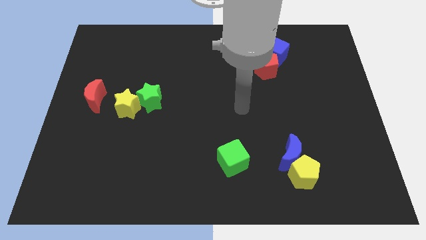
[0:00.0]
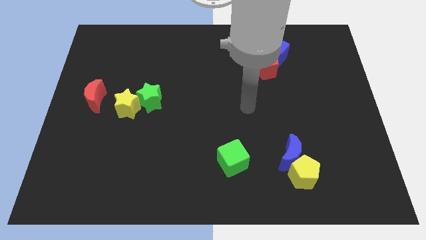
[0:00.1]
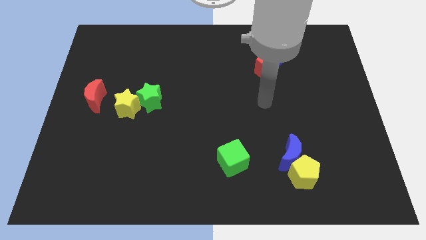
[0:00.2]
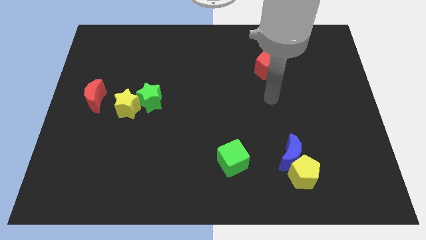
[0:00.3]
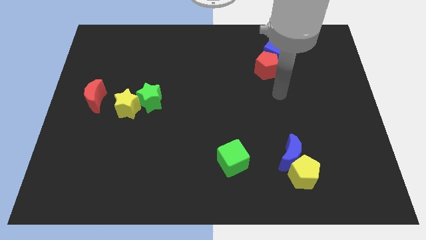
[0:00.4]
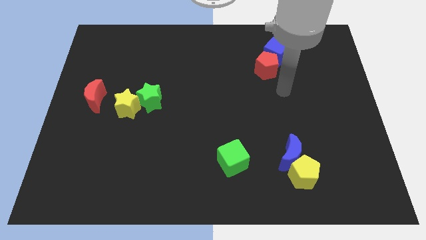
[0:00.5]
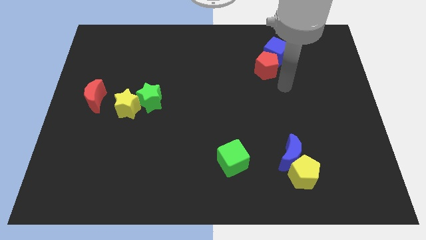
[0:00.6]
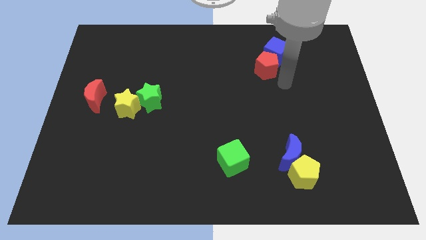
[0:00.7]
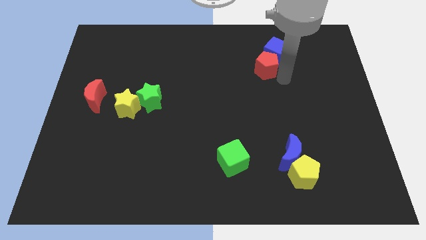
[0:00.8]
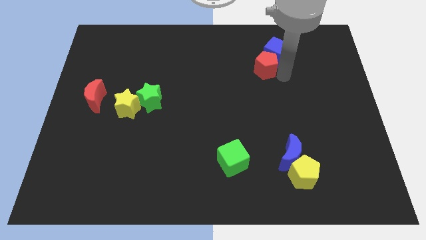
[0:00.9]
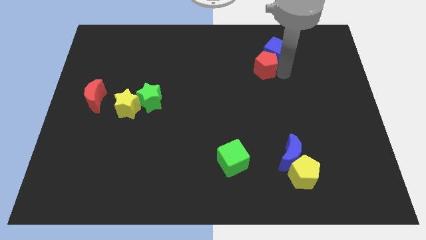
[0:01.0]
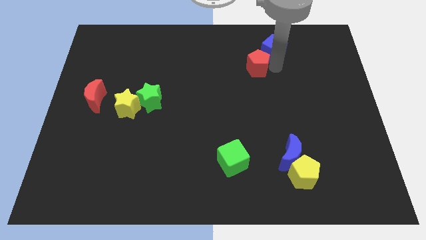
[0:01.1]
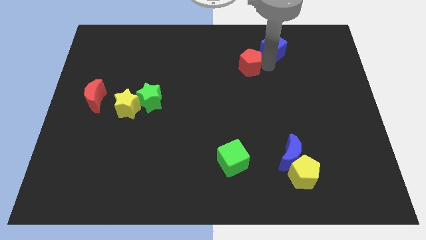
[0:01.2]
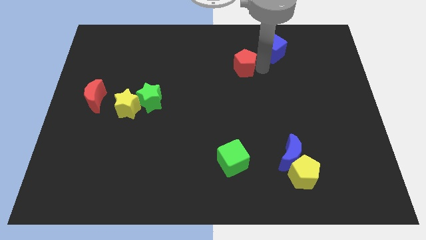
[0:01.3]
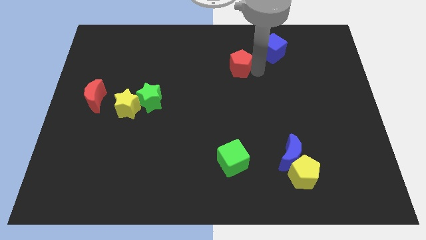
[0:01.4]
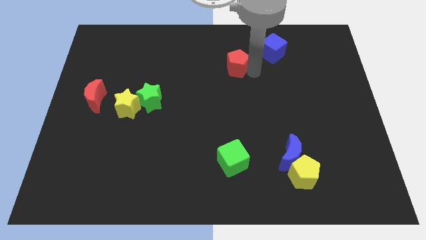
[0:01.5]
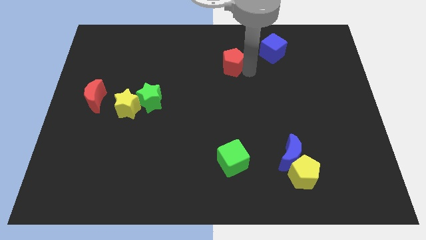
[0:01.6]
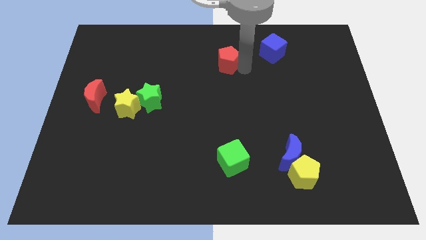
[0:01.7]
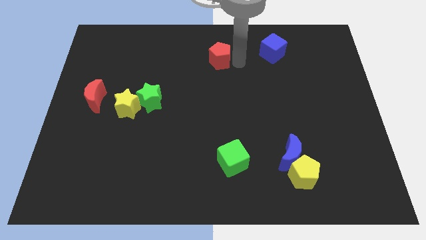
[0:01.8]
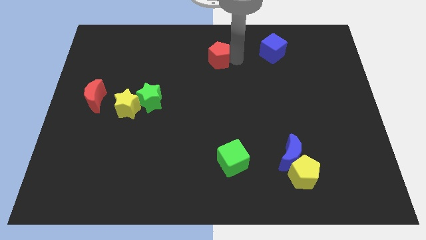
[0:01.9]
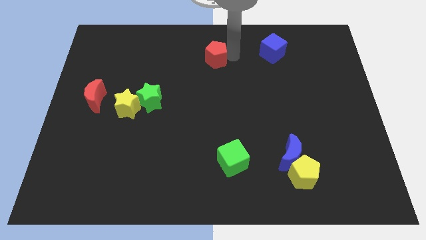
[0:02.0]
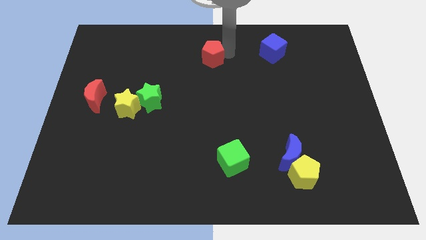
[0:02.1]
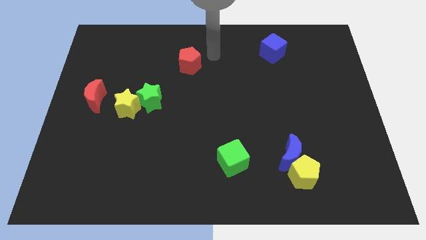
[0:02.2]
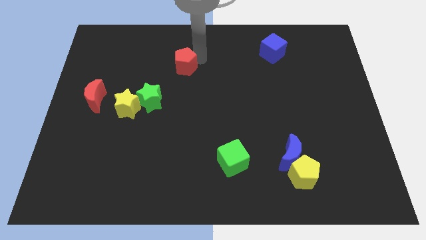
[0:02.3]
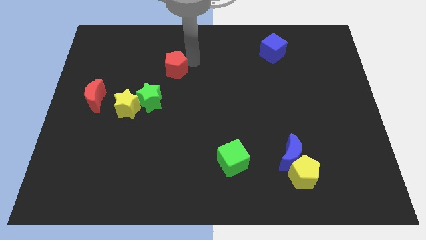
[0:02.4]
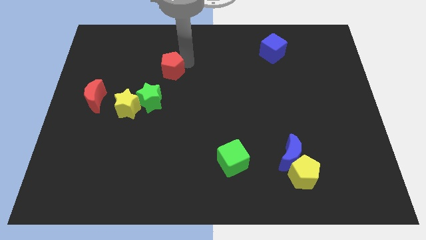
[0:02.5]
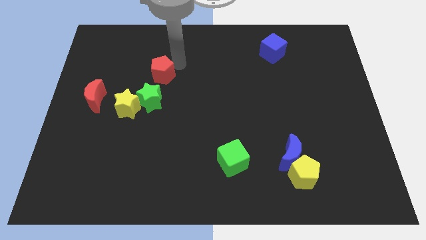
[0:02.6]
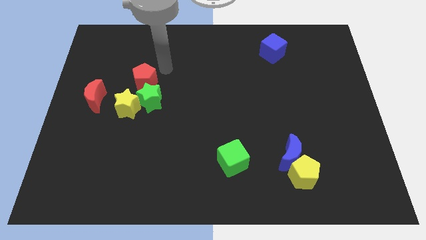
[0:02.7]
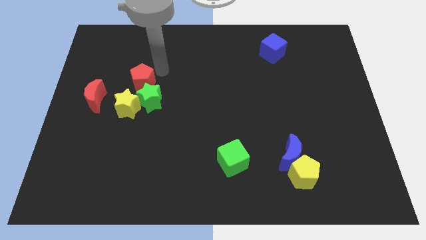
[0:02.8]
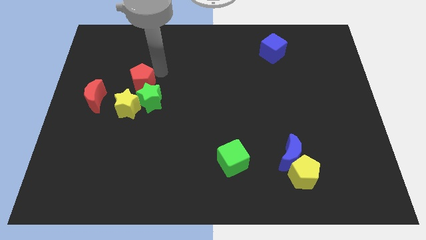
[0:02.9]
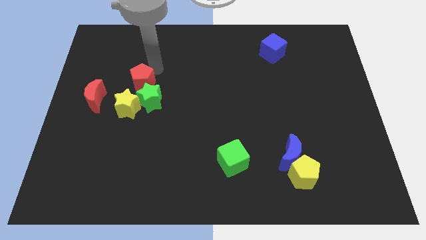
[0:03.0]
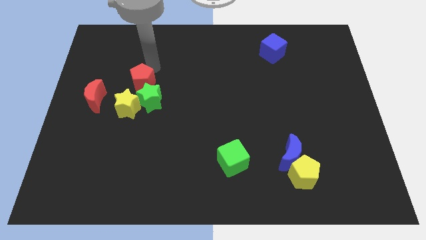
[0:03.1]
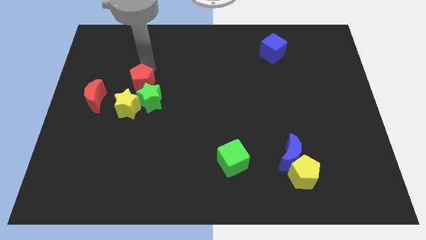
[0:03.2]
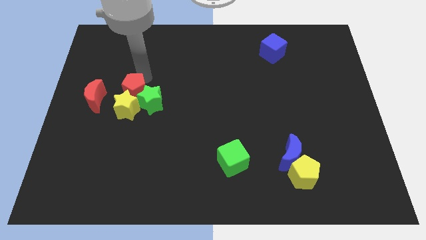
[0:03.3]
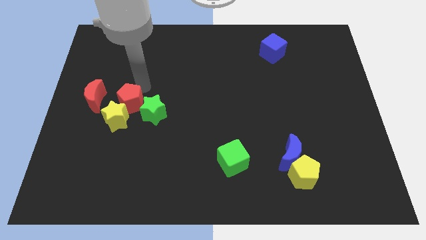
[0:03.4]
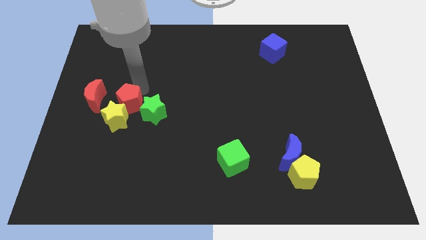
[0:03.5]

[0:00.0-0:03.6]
put the red pentagon to the yellow star

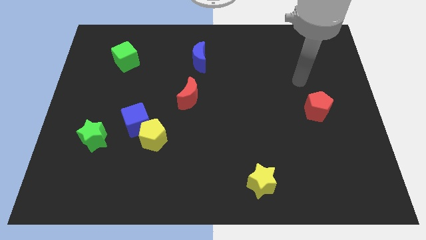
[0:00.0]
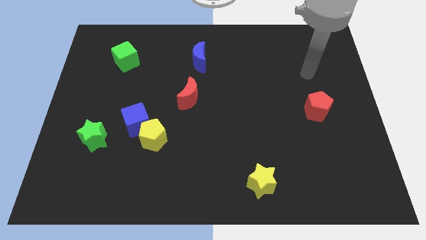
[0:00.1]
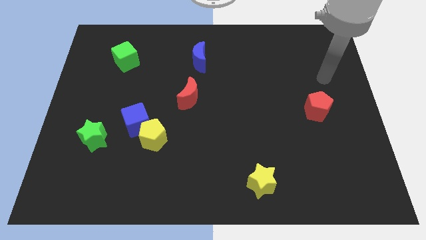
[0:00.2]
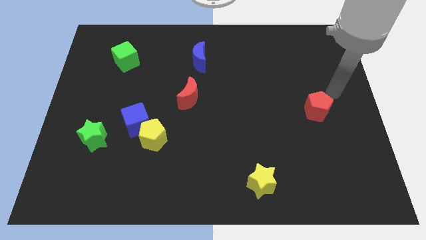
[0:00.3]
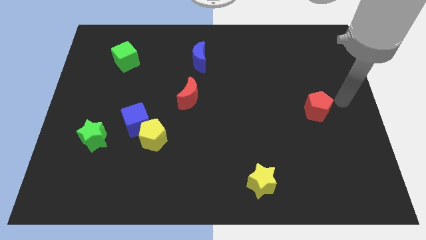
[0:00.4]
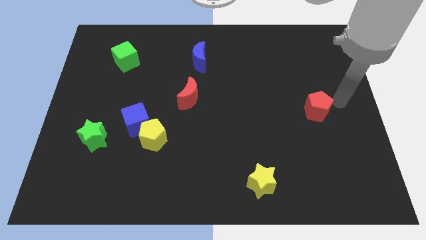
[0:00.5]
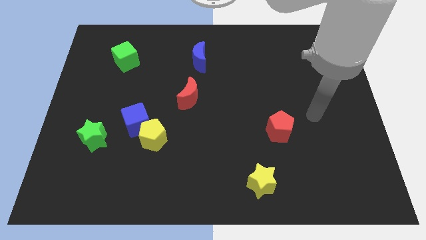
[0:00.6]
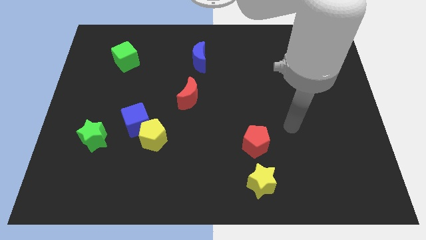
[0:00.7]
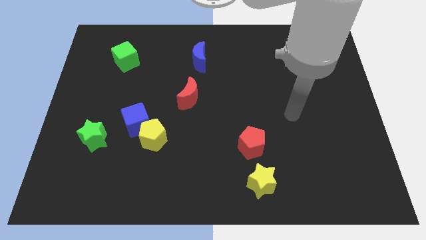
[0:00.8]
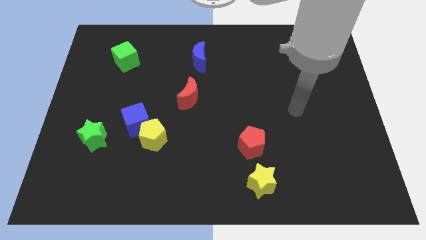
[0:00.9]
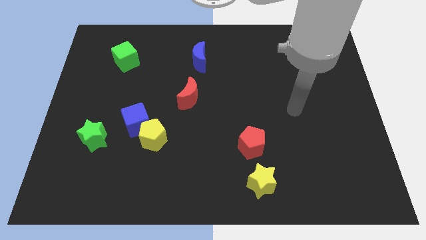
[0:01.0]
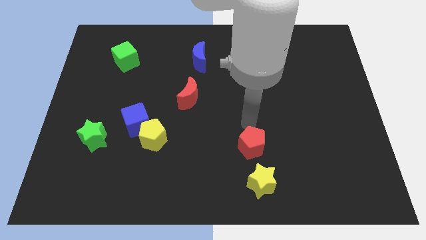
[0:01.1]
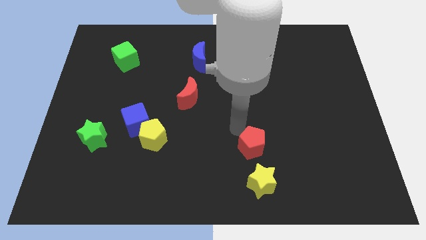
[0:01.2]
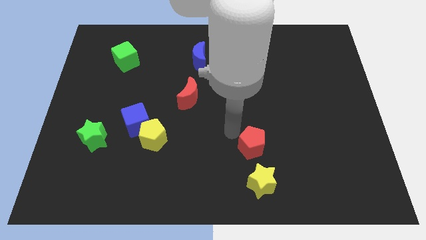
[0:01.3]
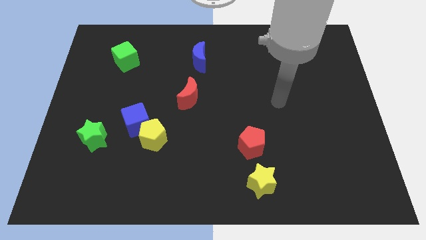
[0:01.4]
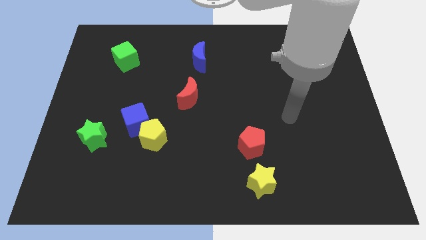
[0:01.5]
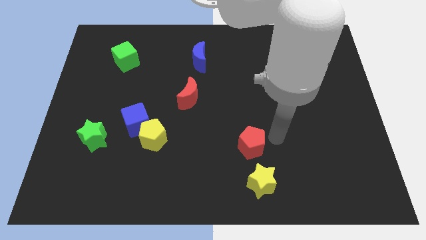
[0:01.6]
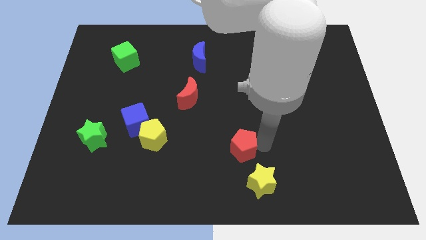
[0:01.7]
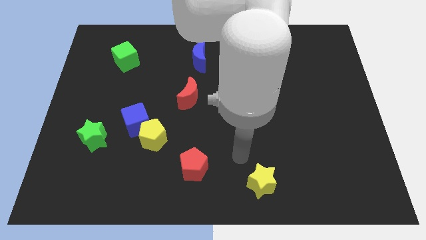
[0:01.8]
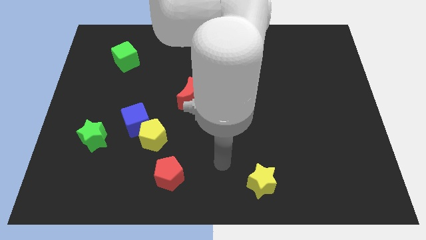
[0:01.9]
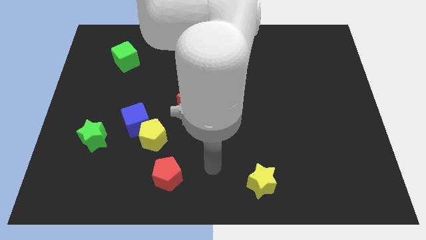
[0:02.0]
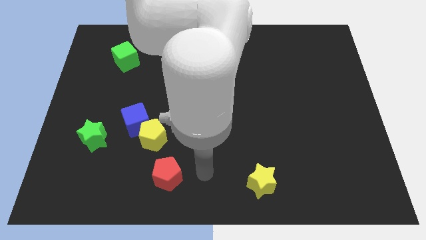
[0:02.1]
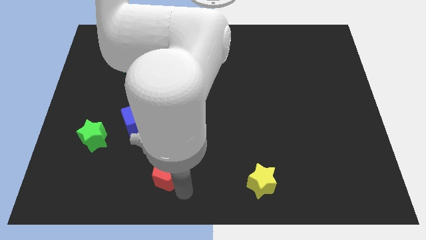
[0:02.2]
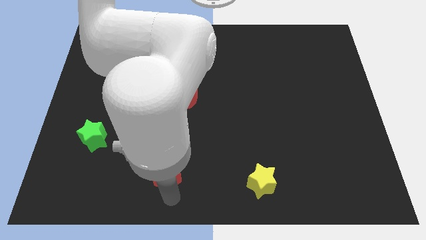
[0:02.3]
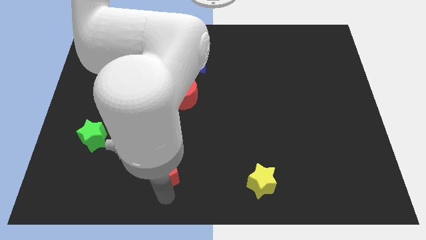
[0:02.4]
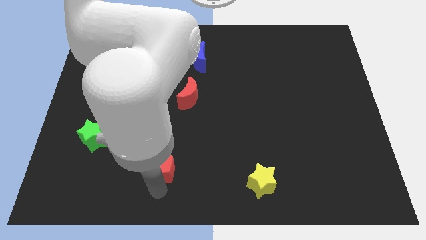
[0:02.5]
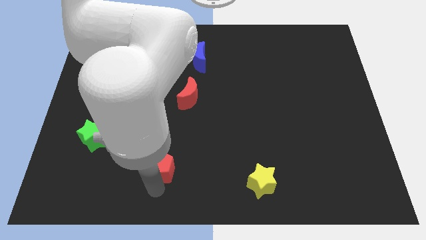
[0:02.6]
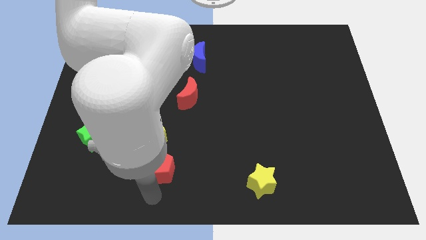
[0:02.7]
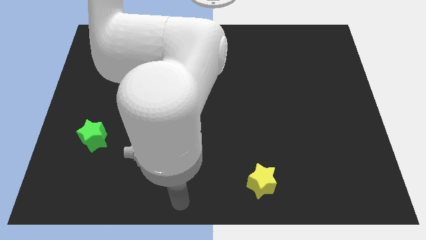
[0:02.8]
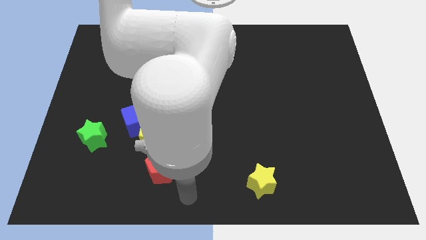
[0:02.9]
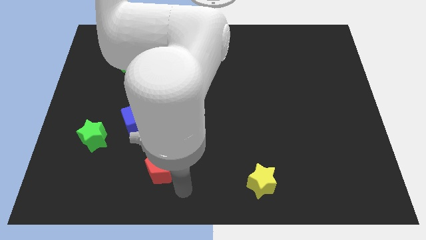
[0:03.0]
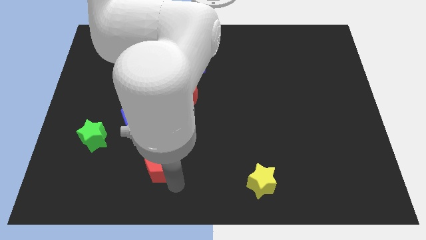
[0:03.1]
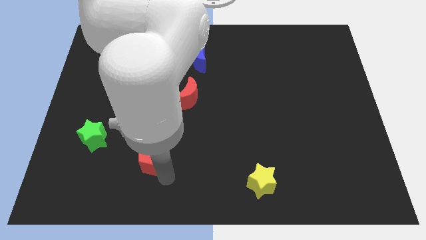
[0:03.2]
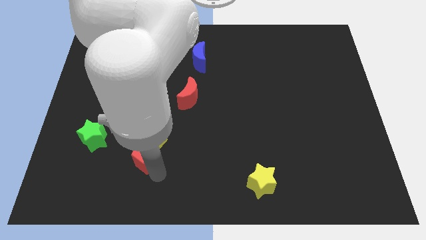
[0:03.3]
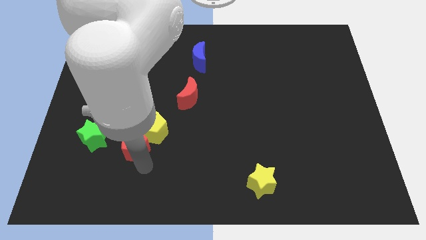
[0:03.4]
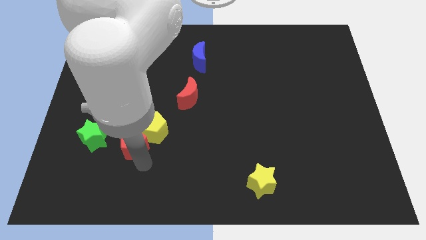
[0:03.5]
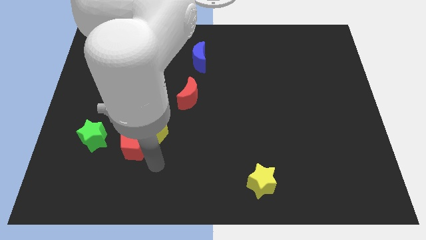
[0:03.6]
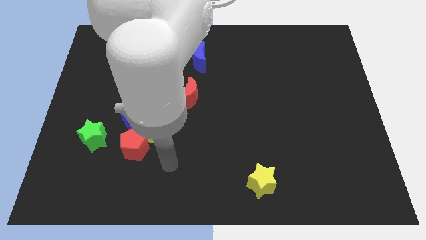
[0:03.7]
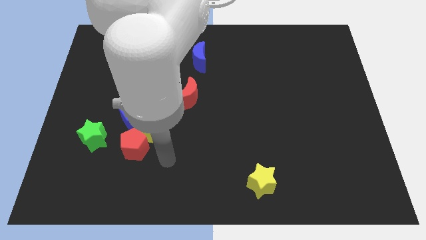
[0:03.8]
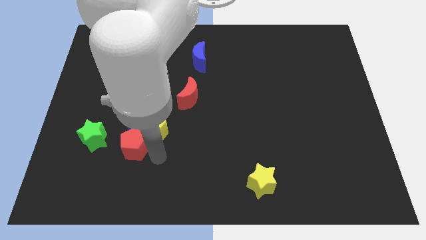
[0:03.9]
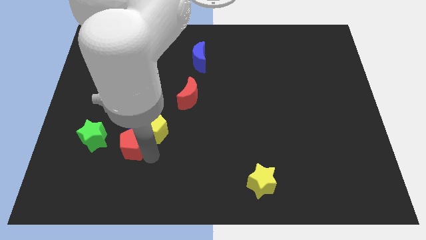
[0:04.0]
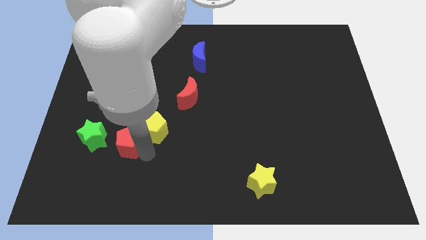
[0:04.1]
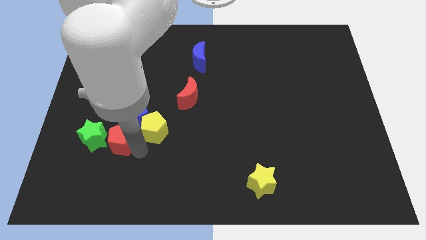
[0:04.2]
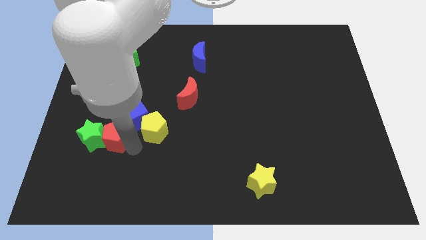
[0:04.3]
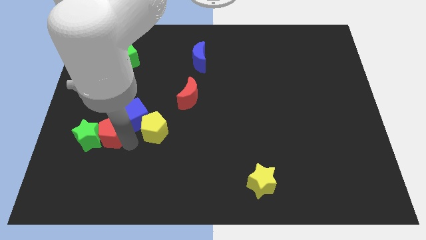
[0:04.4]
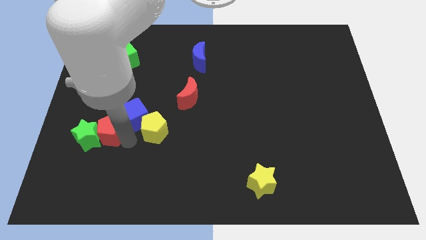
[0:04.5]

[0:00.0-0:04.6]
move the red pentagon to the green star

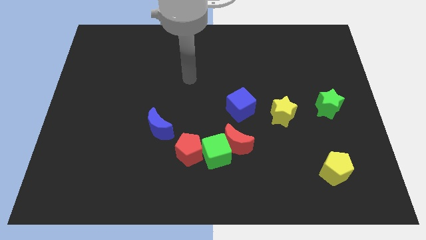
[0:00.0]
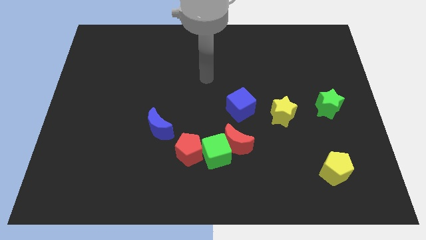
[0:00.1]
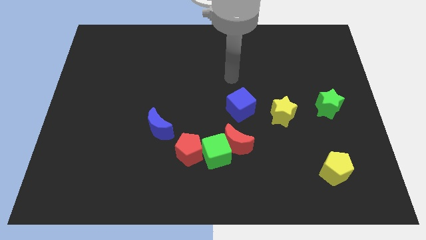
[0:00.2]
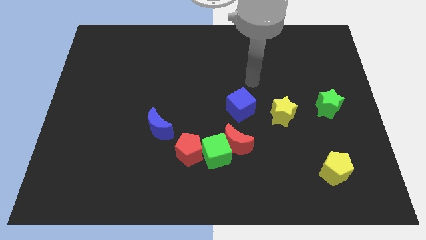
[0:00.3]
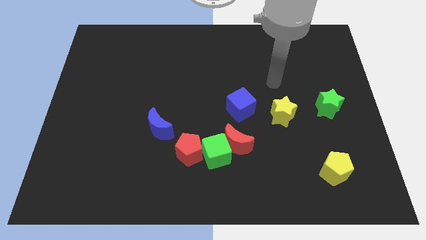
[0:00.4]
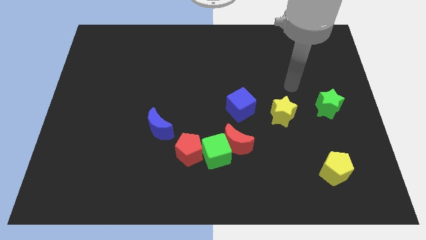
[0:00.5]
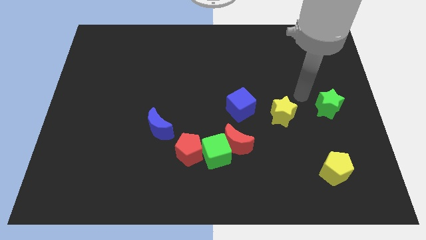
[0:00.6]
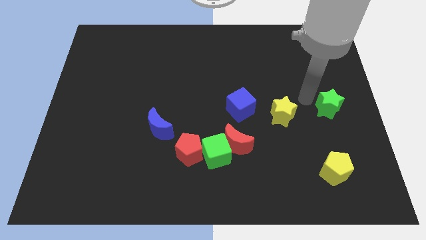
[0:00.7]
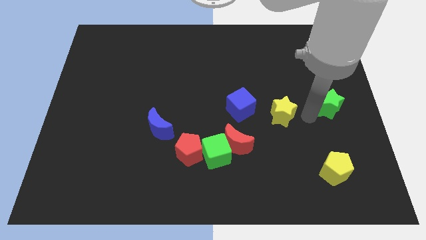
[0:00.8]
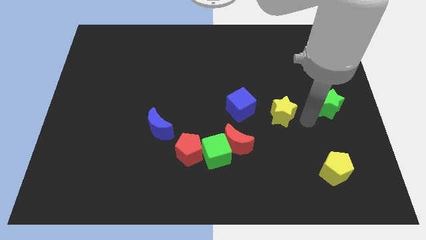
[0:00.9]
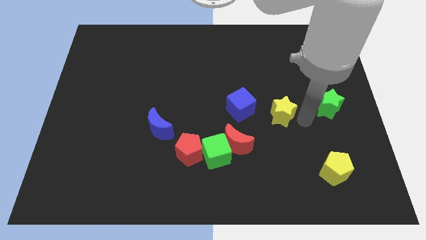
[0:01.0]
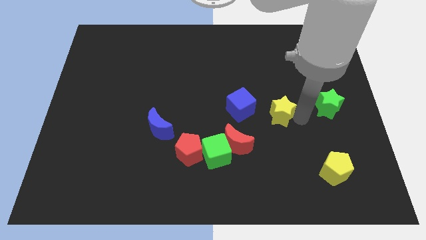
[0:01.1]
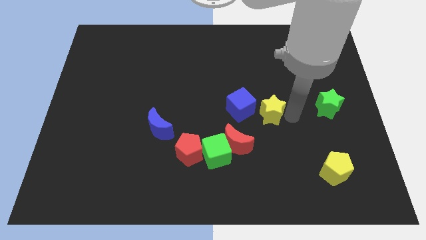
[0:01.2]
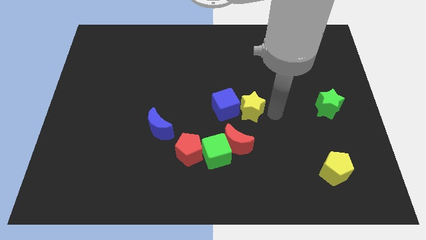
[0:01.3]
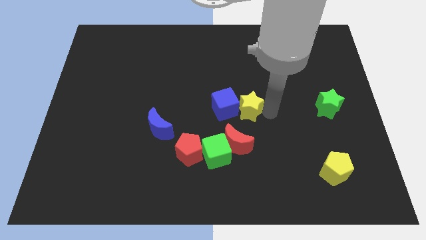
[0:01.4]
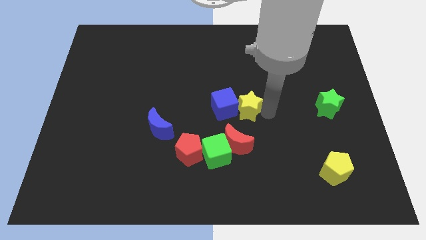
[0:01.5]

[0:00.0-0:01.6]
push the yellow star to the blue cube
